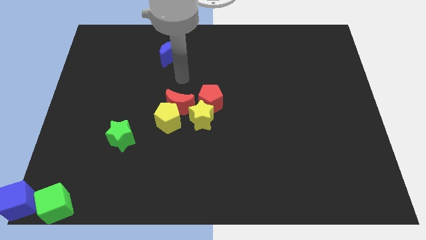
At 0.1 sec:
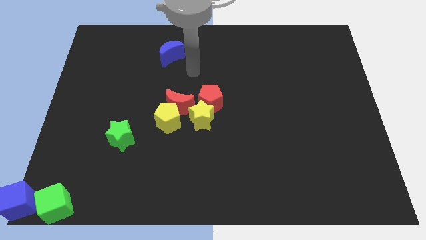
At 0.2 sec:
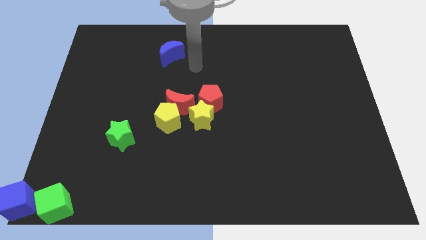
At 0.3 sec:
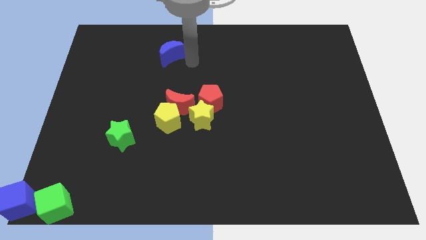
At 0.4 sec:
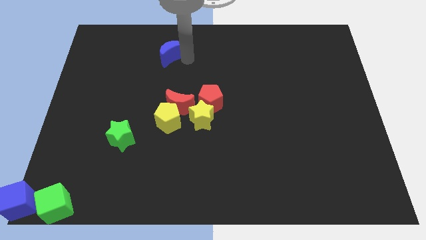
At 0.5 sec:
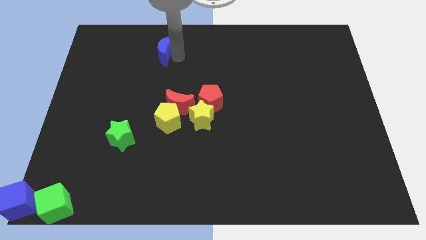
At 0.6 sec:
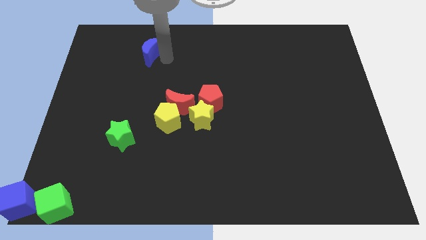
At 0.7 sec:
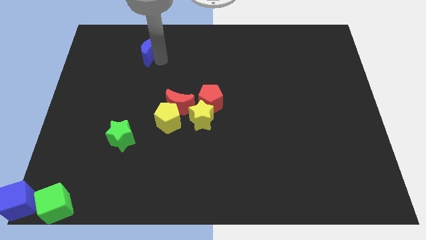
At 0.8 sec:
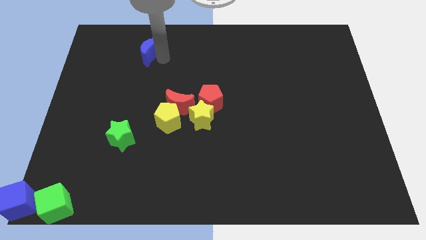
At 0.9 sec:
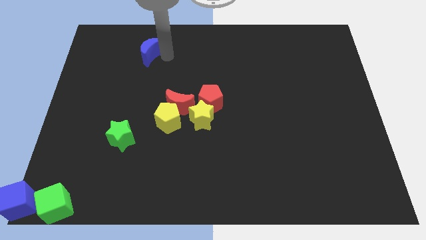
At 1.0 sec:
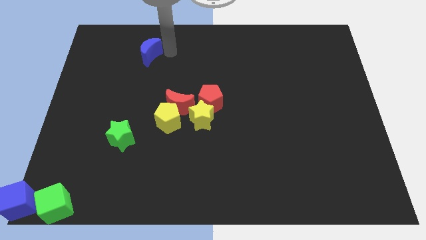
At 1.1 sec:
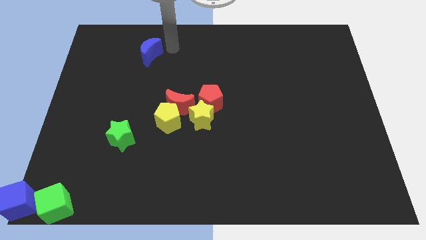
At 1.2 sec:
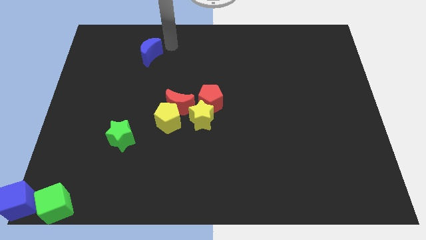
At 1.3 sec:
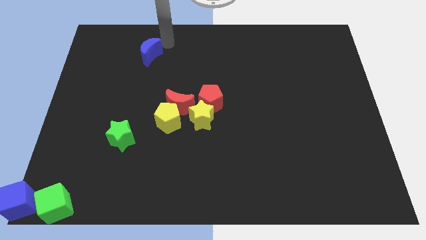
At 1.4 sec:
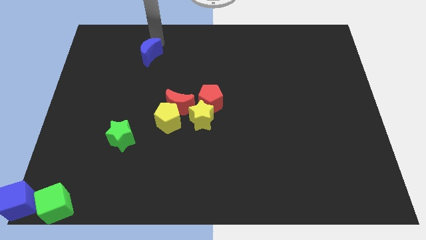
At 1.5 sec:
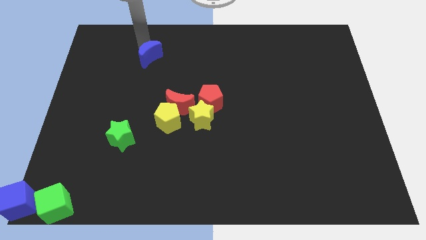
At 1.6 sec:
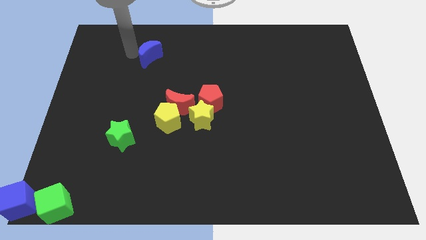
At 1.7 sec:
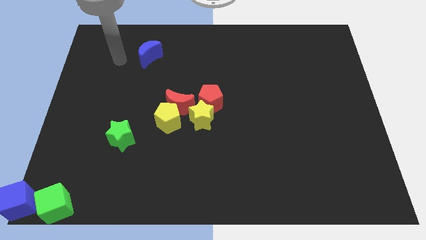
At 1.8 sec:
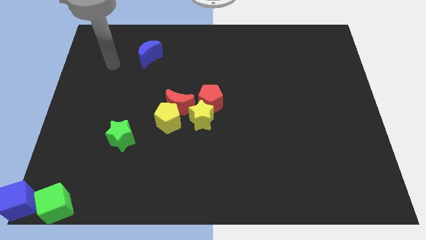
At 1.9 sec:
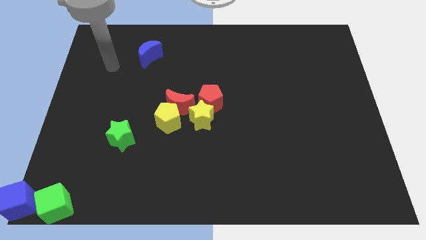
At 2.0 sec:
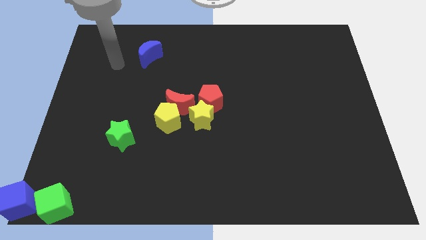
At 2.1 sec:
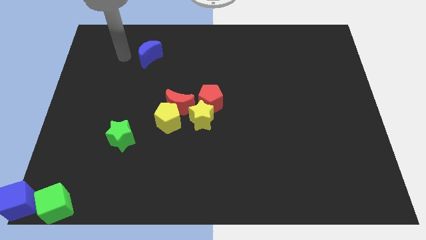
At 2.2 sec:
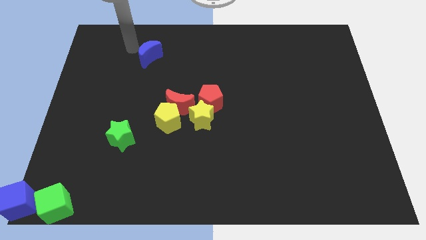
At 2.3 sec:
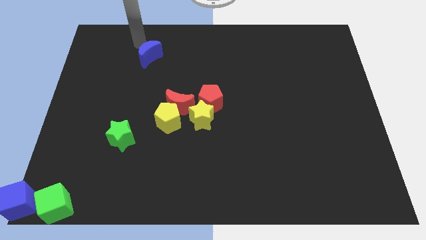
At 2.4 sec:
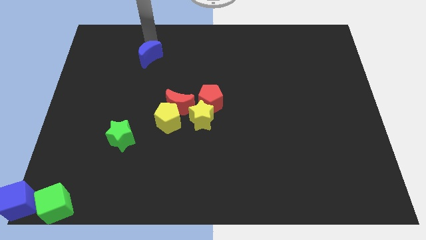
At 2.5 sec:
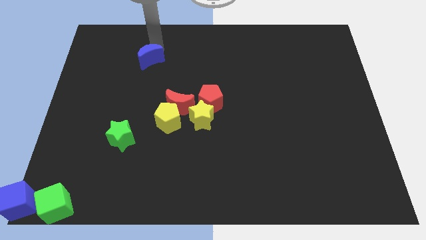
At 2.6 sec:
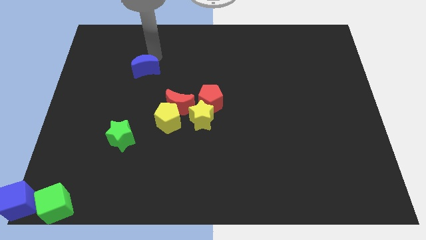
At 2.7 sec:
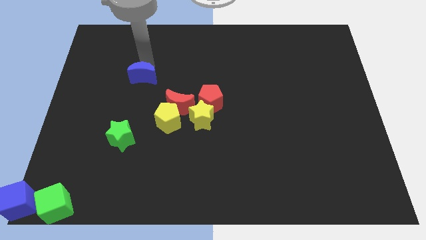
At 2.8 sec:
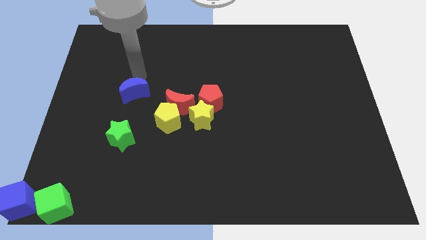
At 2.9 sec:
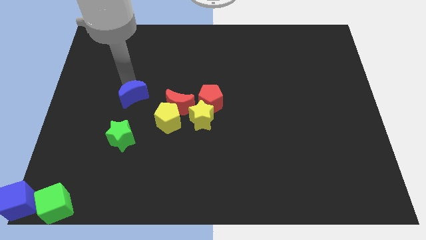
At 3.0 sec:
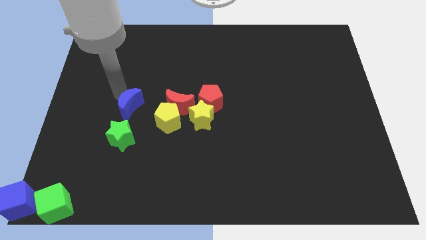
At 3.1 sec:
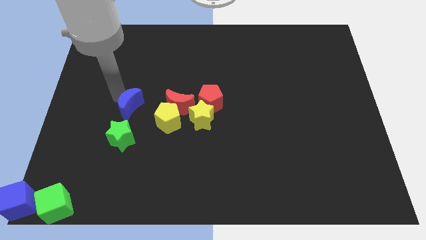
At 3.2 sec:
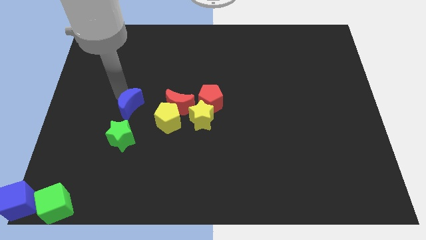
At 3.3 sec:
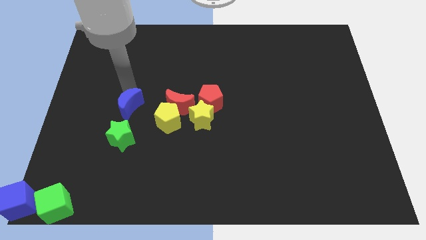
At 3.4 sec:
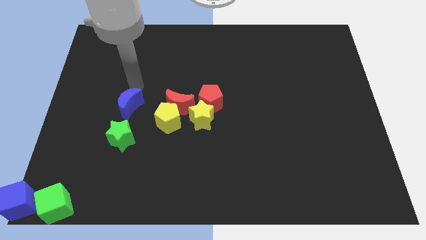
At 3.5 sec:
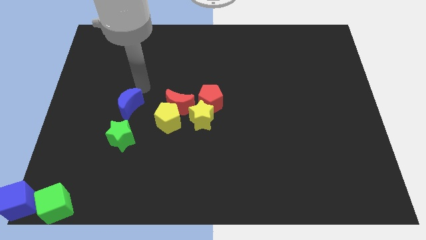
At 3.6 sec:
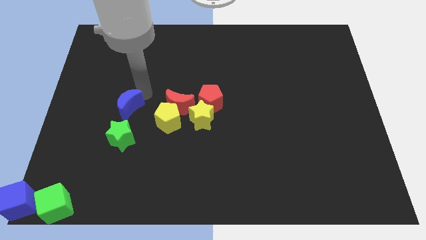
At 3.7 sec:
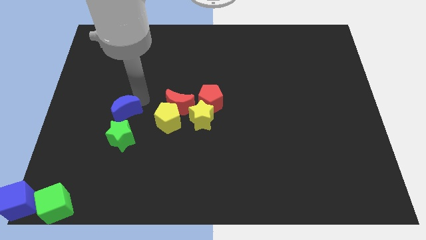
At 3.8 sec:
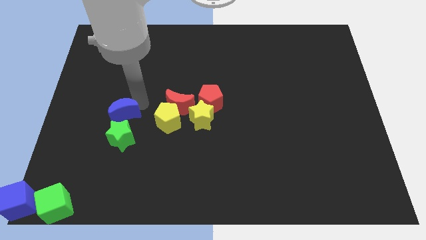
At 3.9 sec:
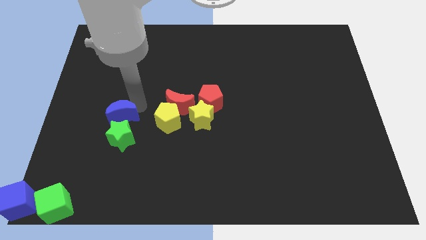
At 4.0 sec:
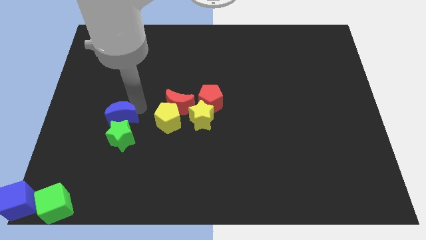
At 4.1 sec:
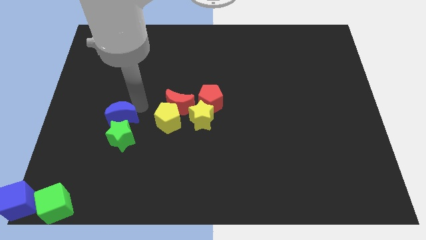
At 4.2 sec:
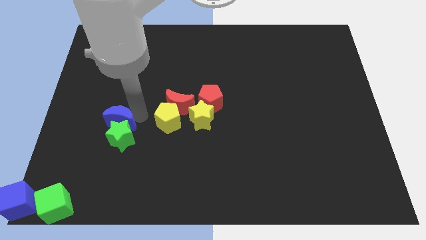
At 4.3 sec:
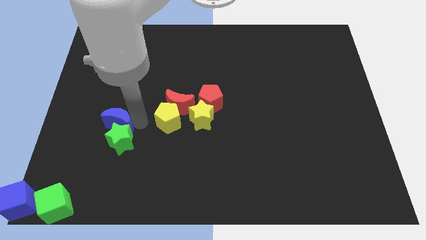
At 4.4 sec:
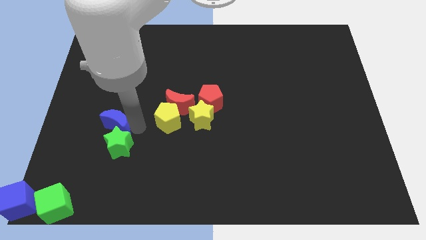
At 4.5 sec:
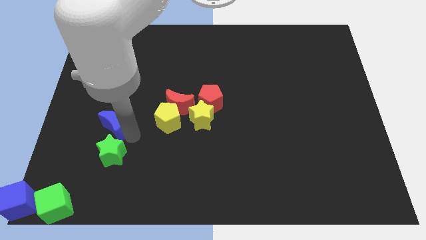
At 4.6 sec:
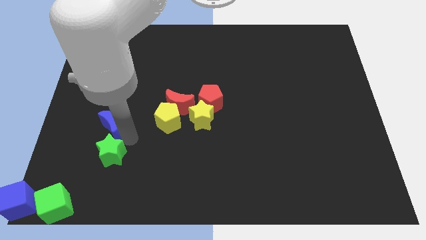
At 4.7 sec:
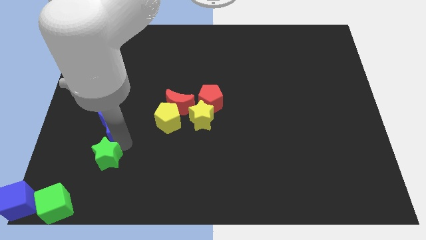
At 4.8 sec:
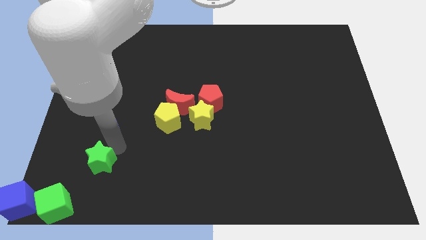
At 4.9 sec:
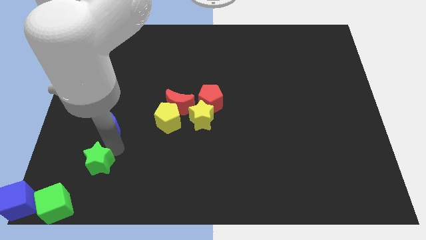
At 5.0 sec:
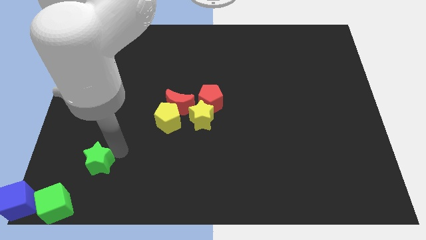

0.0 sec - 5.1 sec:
slide the blue moon towards the green star

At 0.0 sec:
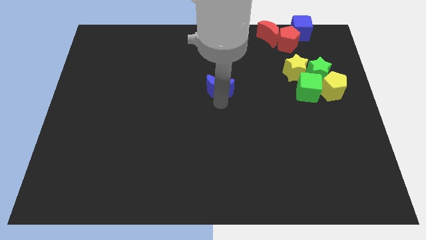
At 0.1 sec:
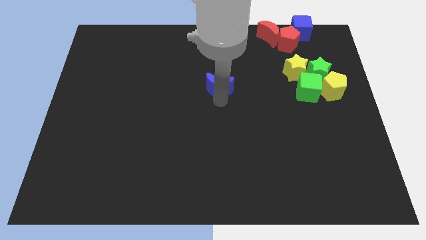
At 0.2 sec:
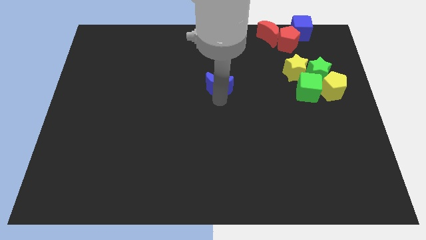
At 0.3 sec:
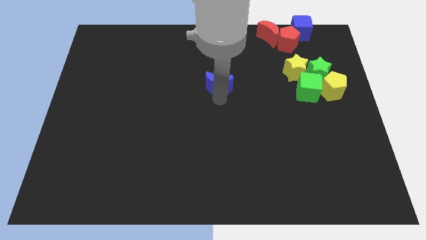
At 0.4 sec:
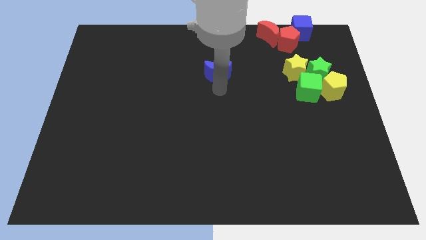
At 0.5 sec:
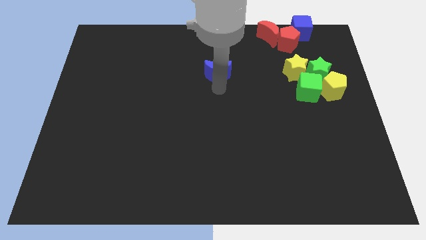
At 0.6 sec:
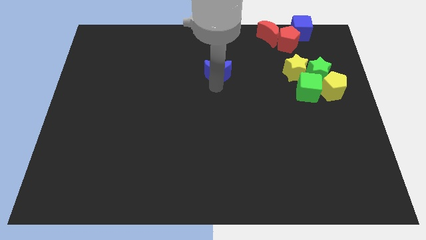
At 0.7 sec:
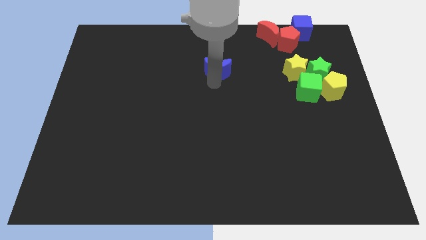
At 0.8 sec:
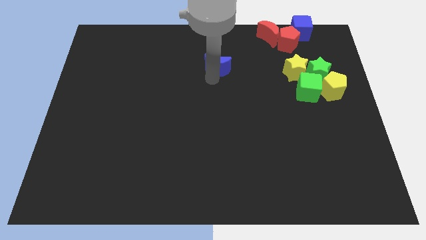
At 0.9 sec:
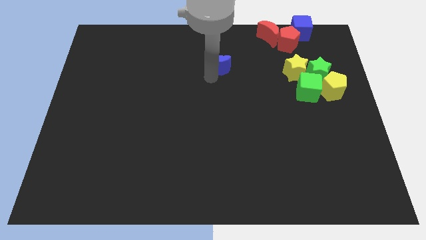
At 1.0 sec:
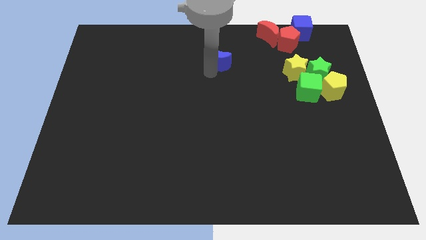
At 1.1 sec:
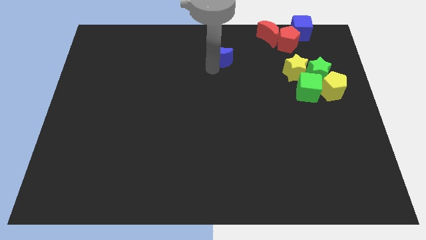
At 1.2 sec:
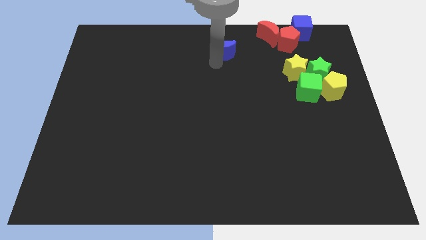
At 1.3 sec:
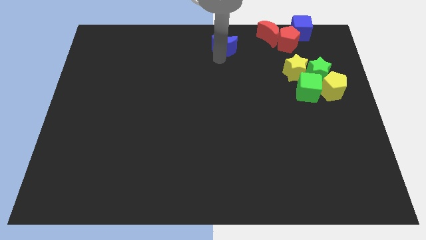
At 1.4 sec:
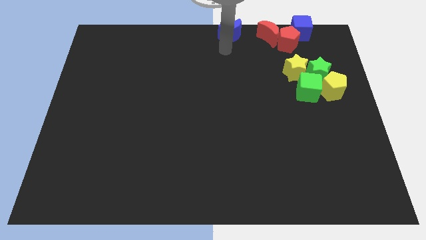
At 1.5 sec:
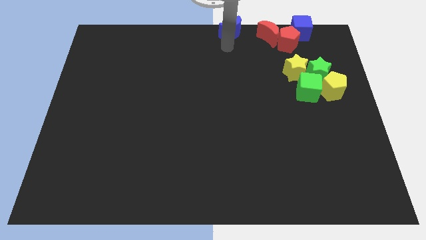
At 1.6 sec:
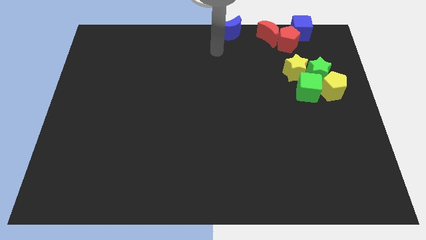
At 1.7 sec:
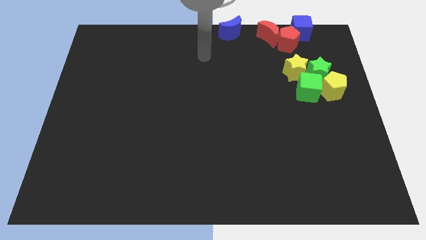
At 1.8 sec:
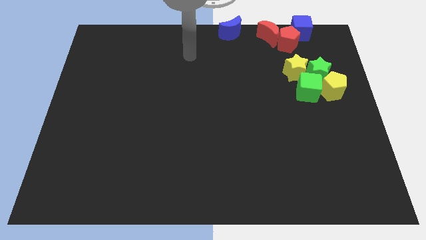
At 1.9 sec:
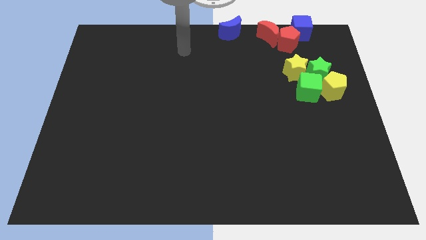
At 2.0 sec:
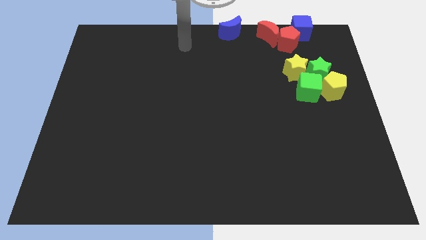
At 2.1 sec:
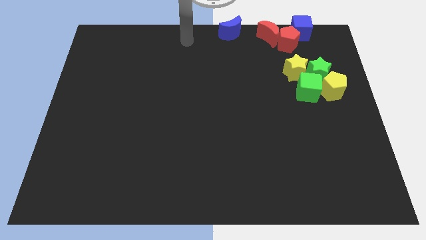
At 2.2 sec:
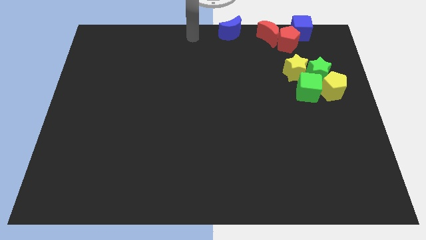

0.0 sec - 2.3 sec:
push the blue moon to the top side of the board

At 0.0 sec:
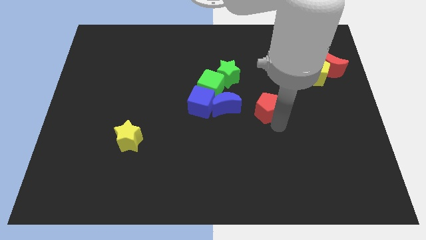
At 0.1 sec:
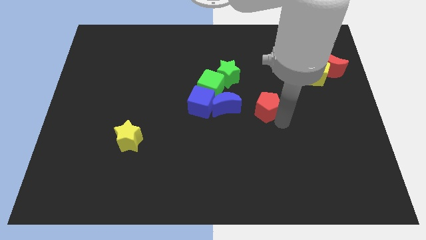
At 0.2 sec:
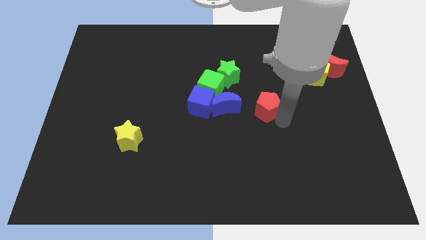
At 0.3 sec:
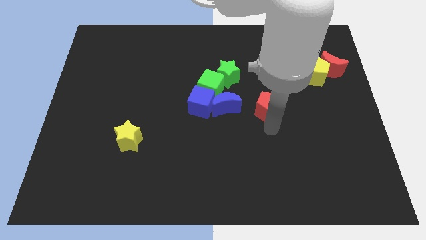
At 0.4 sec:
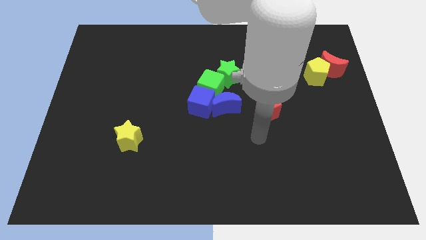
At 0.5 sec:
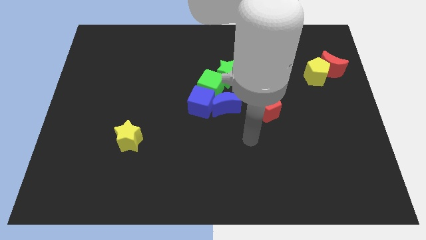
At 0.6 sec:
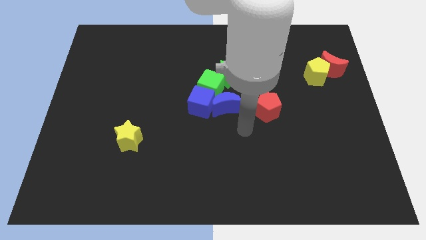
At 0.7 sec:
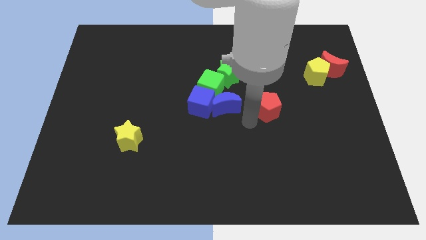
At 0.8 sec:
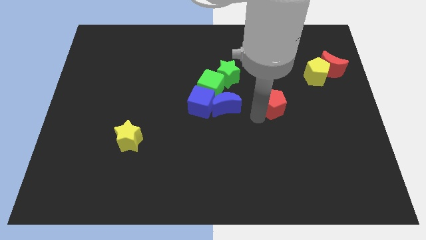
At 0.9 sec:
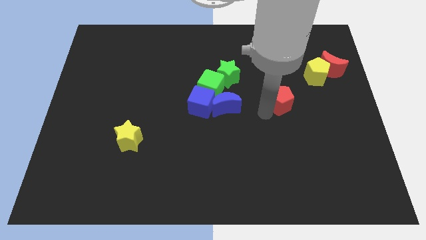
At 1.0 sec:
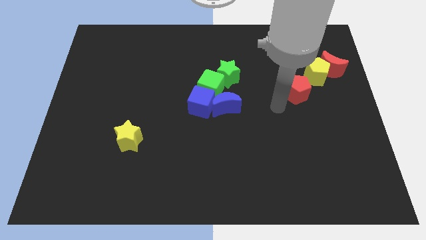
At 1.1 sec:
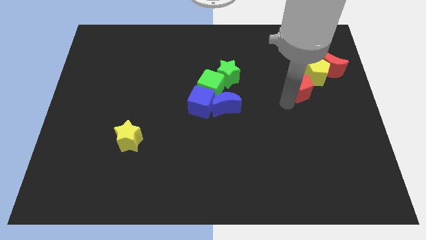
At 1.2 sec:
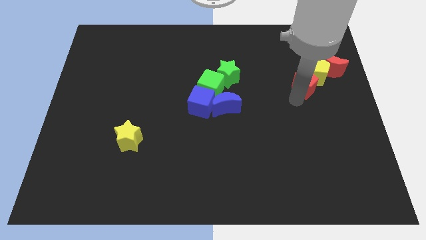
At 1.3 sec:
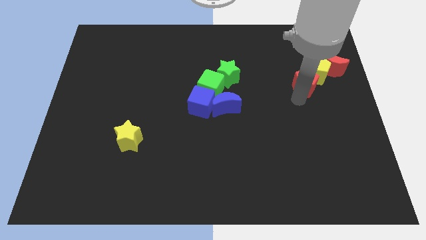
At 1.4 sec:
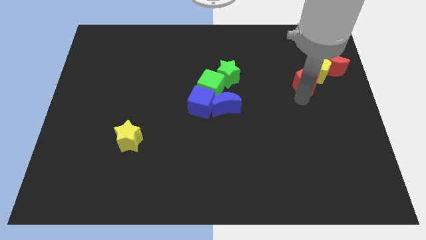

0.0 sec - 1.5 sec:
push the red pentagon into the yellow pentagon
